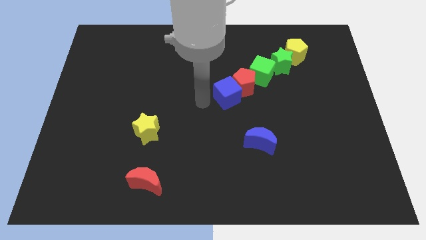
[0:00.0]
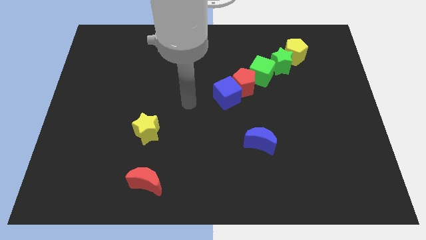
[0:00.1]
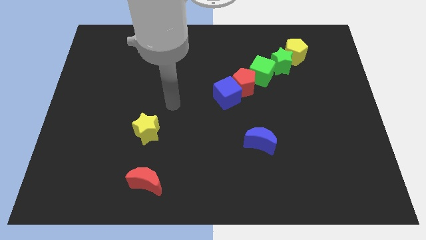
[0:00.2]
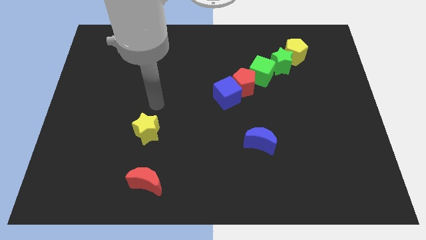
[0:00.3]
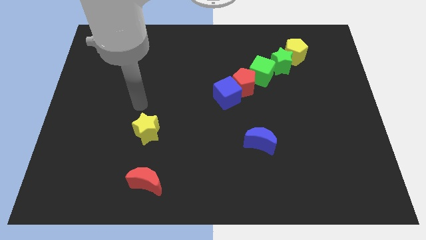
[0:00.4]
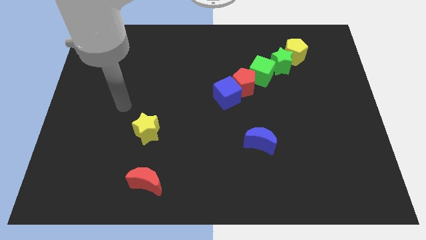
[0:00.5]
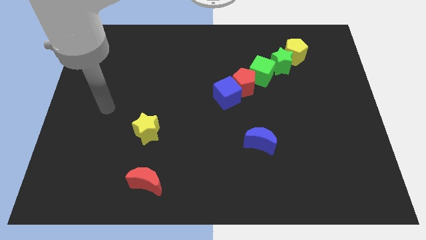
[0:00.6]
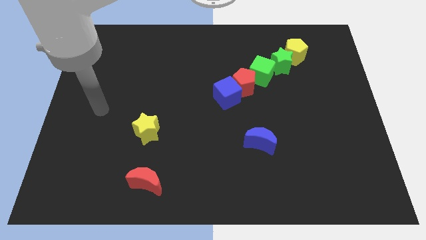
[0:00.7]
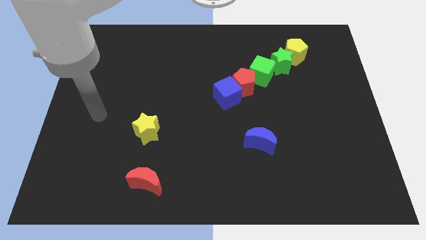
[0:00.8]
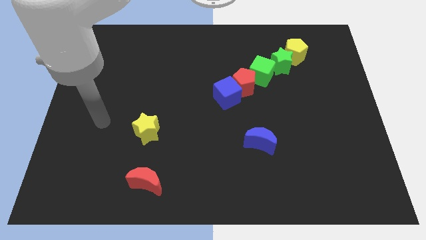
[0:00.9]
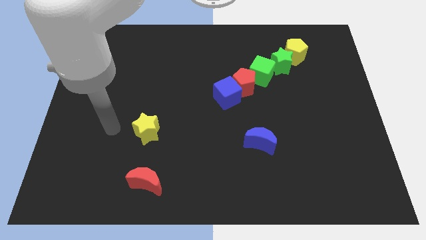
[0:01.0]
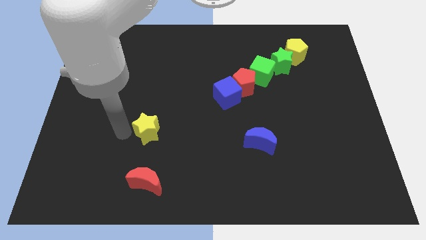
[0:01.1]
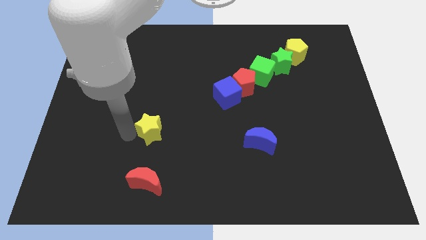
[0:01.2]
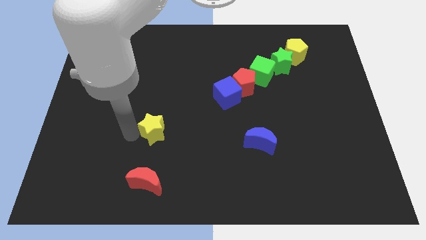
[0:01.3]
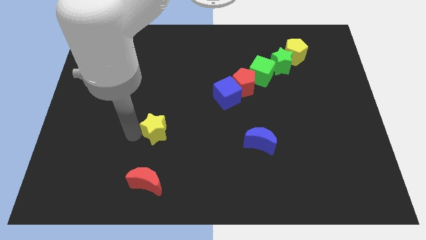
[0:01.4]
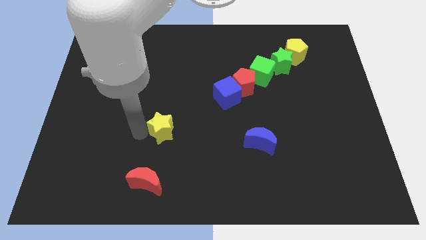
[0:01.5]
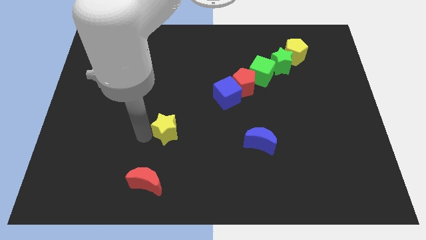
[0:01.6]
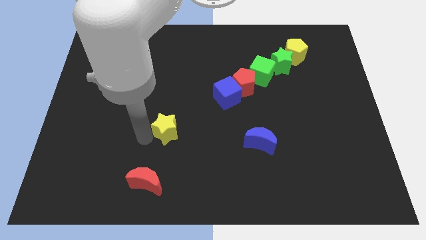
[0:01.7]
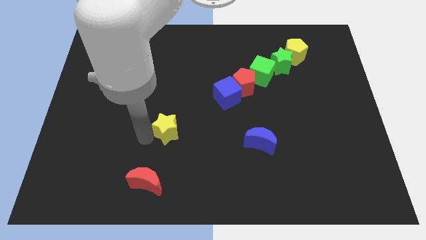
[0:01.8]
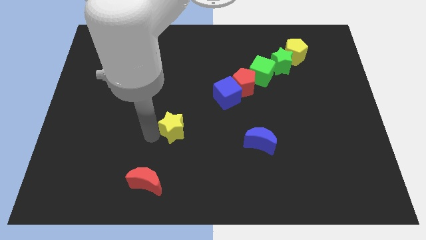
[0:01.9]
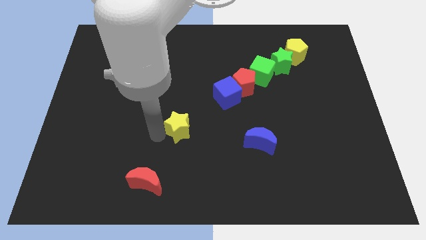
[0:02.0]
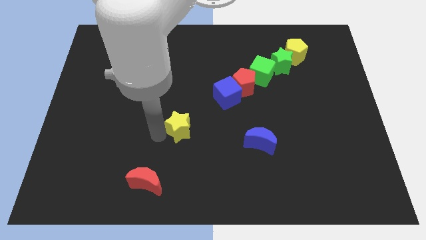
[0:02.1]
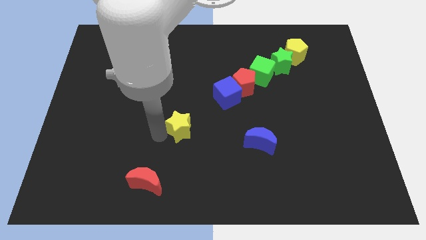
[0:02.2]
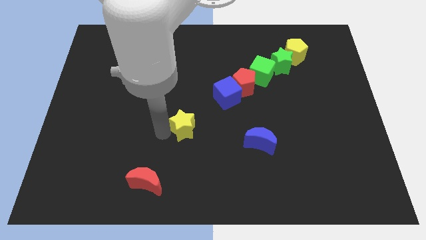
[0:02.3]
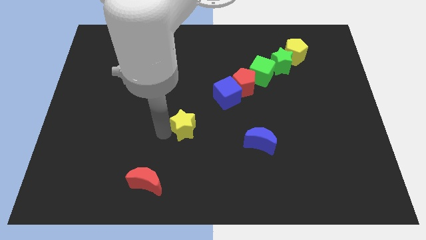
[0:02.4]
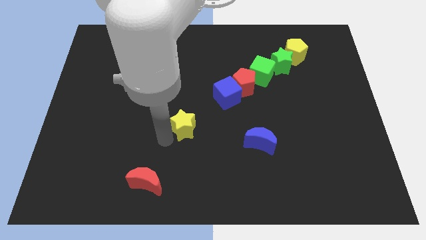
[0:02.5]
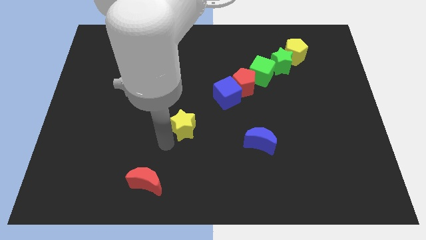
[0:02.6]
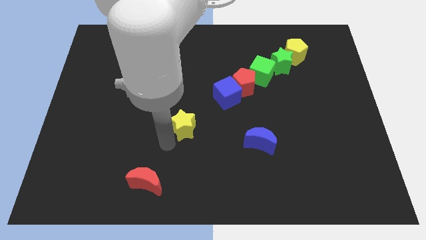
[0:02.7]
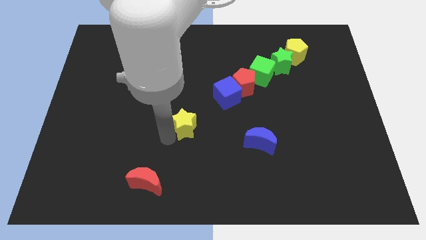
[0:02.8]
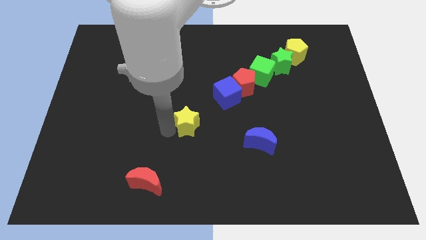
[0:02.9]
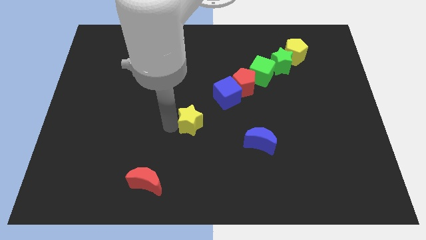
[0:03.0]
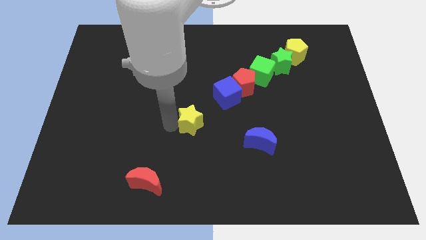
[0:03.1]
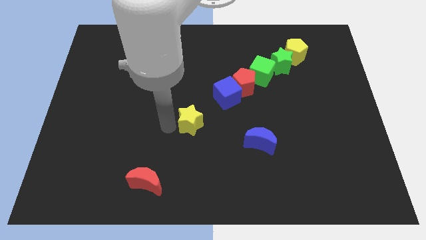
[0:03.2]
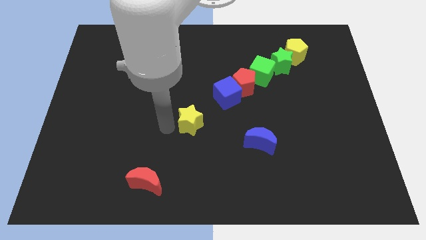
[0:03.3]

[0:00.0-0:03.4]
push the yellow star towards the blue cube

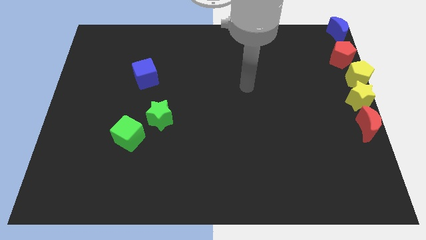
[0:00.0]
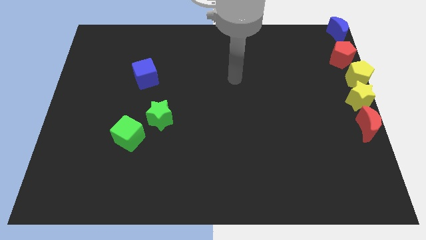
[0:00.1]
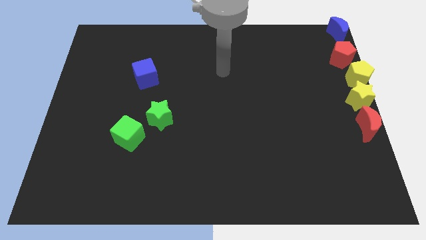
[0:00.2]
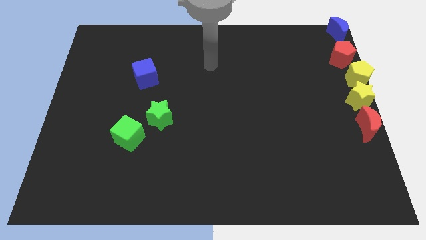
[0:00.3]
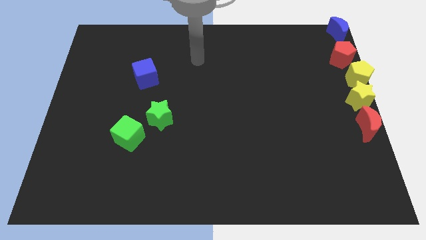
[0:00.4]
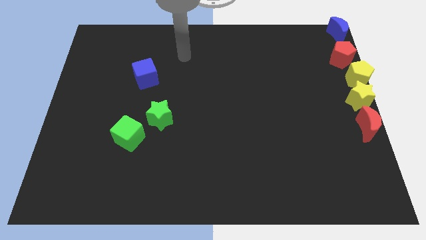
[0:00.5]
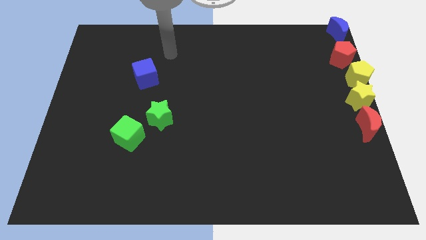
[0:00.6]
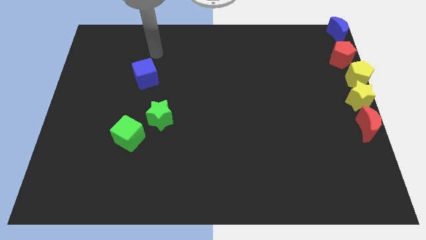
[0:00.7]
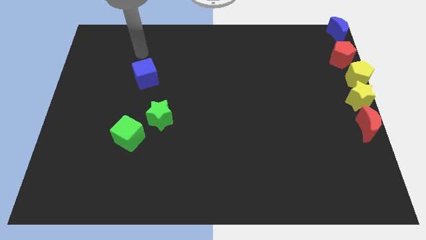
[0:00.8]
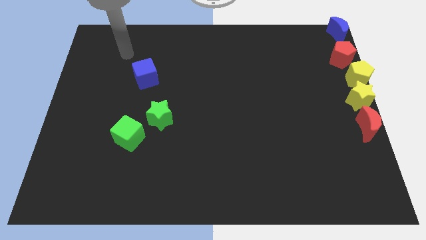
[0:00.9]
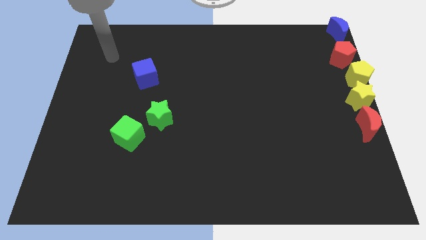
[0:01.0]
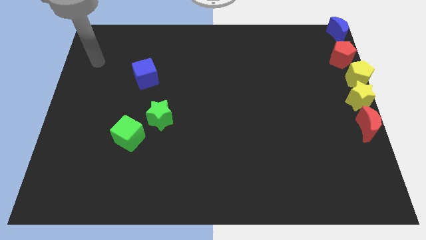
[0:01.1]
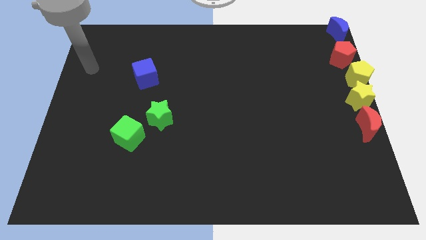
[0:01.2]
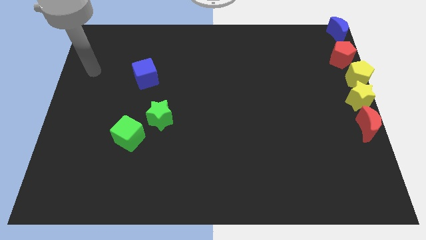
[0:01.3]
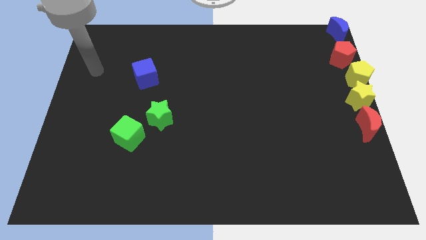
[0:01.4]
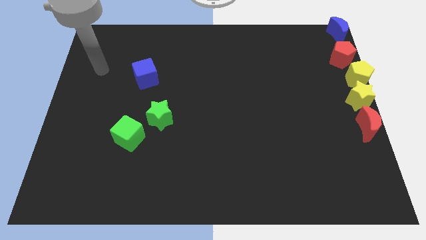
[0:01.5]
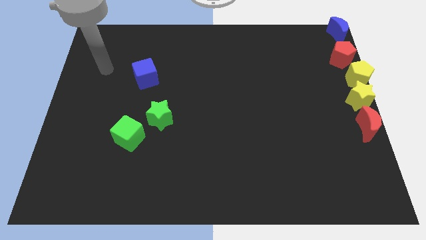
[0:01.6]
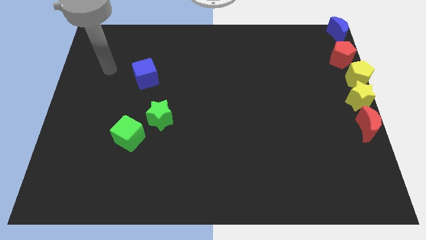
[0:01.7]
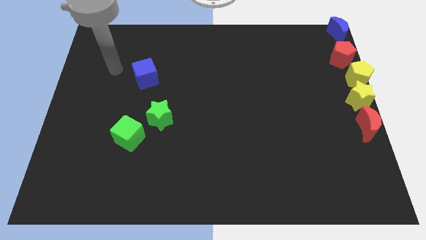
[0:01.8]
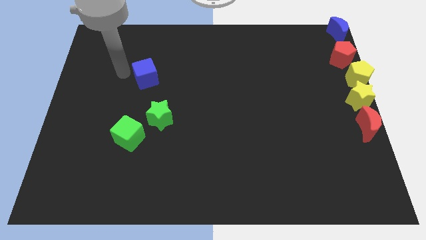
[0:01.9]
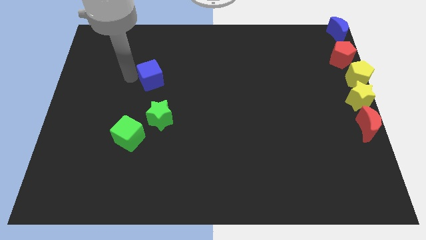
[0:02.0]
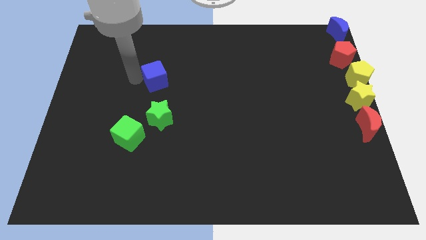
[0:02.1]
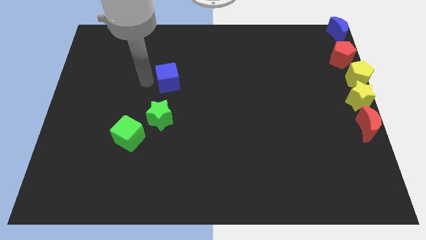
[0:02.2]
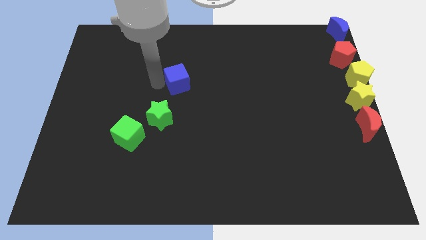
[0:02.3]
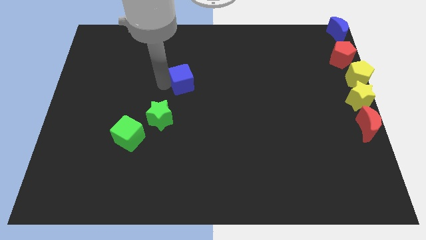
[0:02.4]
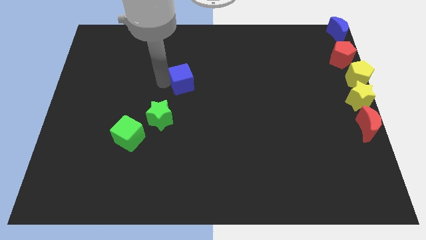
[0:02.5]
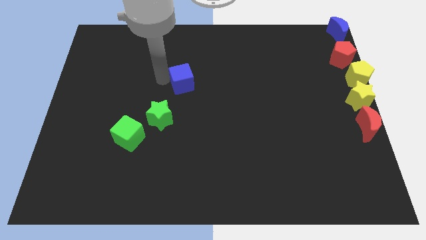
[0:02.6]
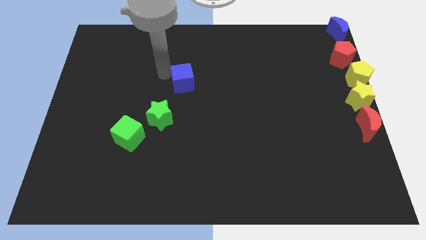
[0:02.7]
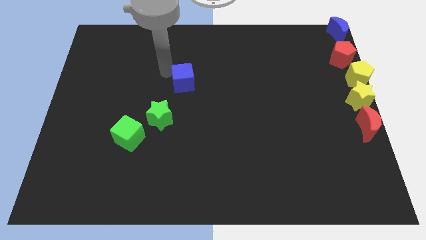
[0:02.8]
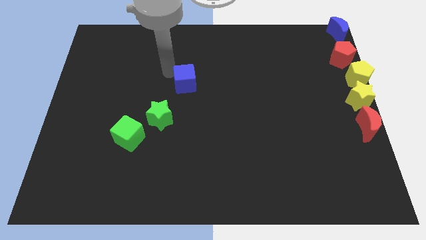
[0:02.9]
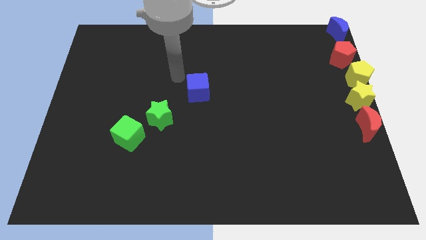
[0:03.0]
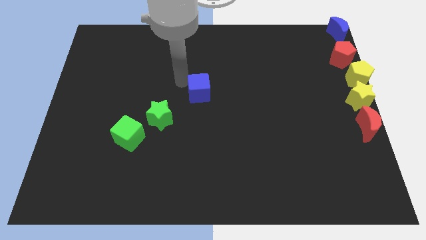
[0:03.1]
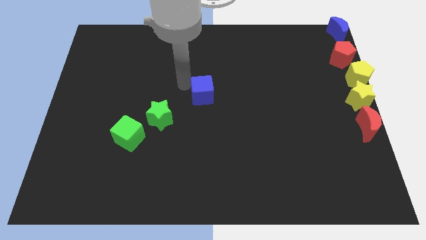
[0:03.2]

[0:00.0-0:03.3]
slide the blue cube diagonally top right to the green star

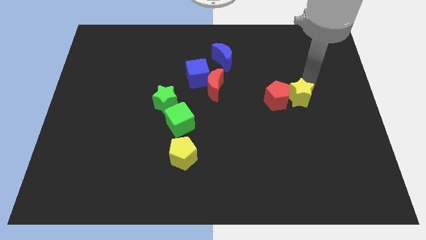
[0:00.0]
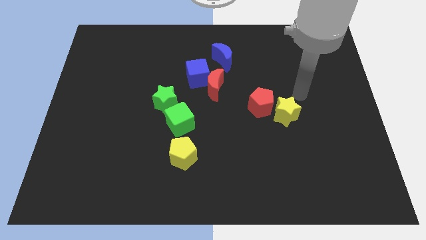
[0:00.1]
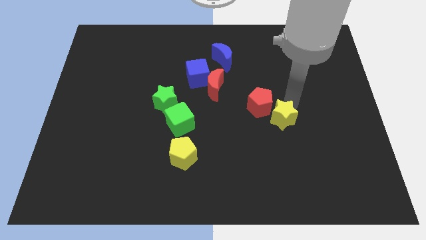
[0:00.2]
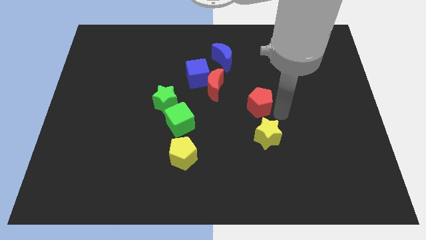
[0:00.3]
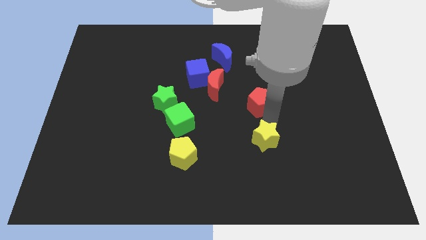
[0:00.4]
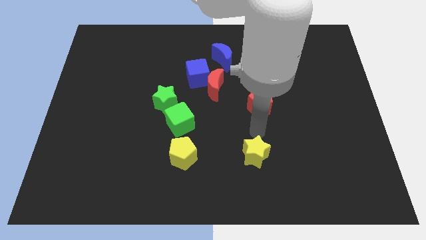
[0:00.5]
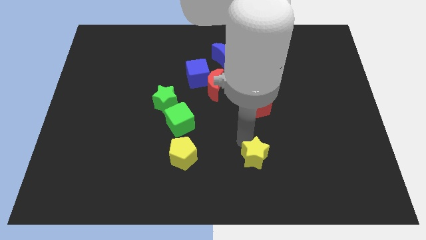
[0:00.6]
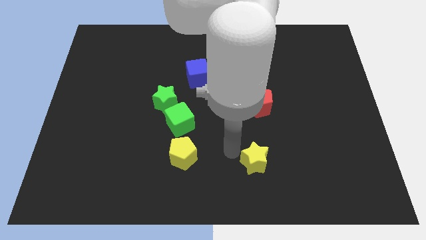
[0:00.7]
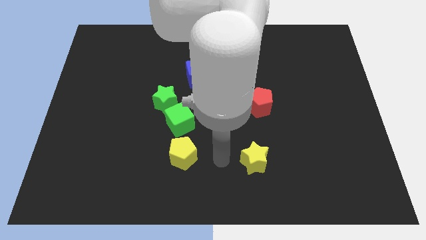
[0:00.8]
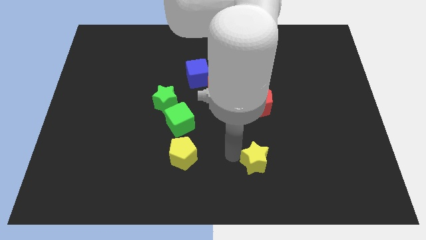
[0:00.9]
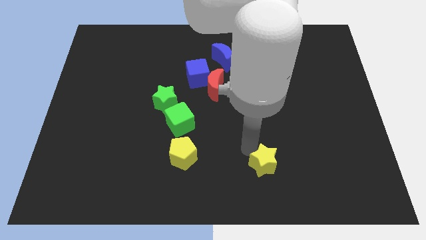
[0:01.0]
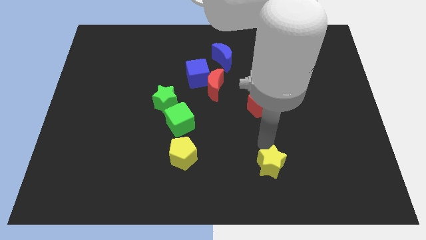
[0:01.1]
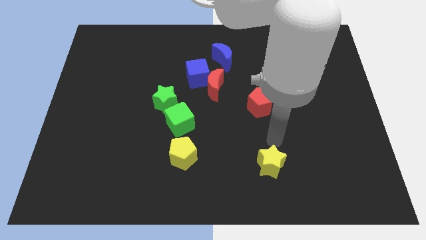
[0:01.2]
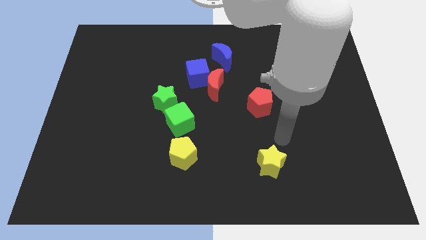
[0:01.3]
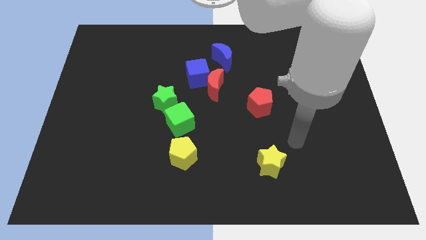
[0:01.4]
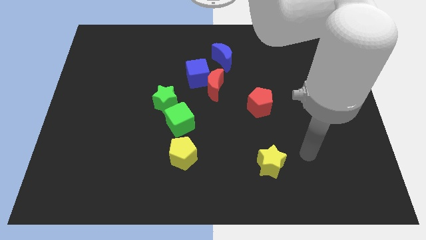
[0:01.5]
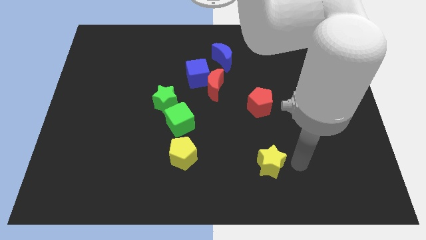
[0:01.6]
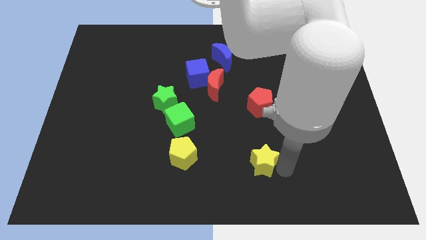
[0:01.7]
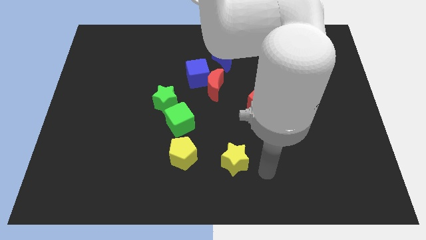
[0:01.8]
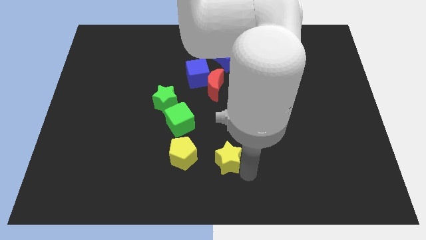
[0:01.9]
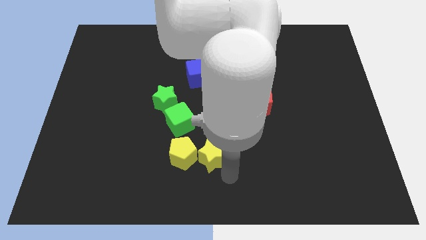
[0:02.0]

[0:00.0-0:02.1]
apart yellow star from red pentagon
